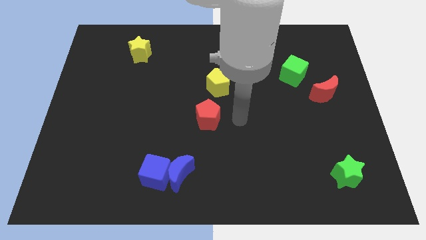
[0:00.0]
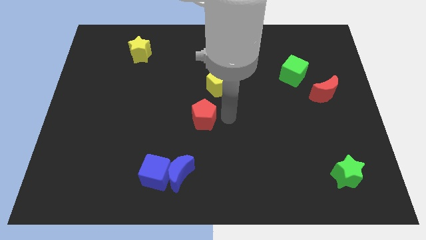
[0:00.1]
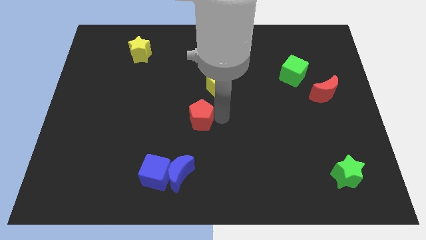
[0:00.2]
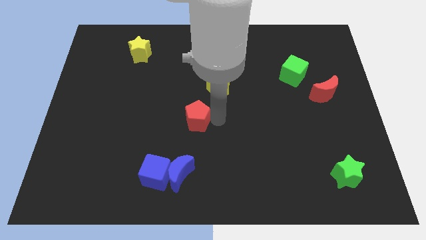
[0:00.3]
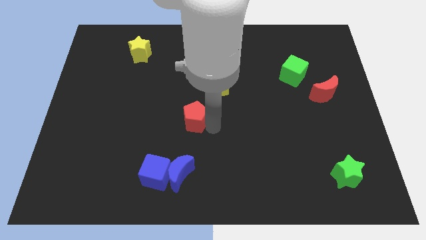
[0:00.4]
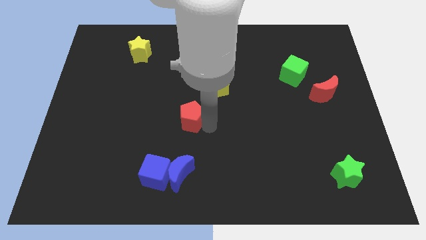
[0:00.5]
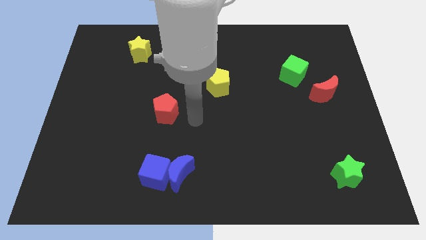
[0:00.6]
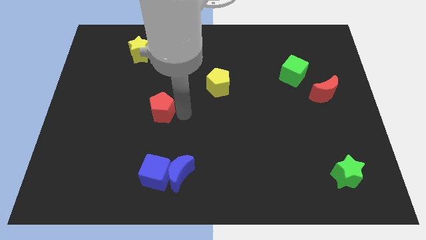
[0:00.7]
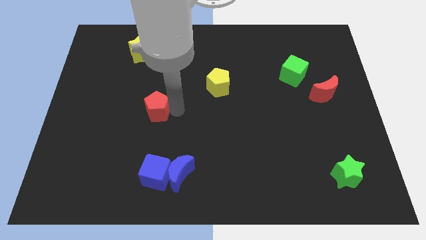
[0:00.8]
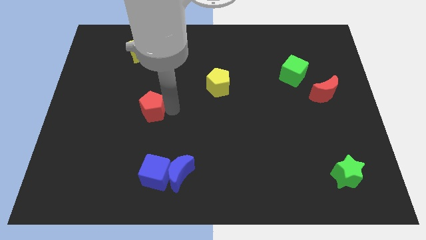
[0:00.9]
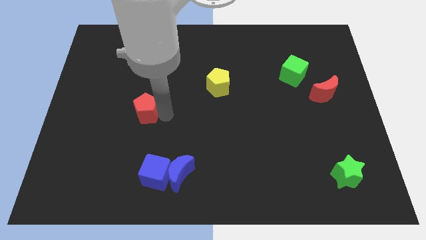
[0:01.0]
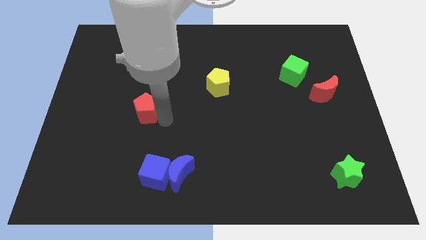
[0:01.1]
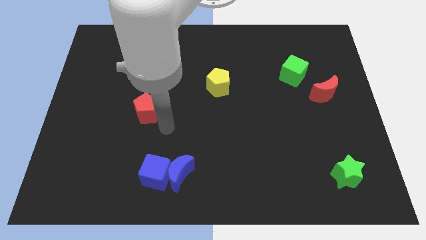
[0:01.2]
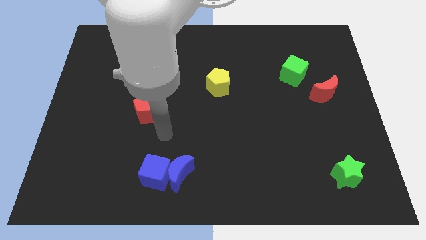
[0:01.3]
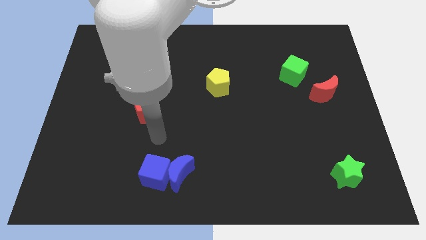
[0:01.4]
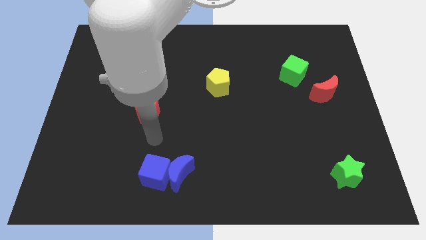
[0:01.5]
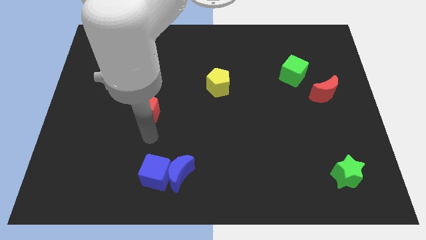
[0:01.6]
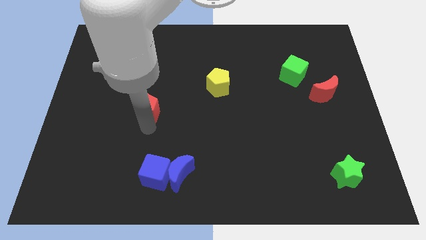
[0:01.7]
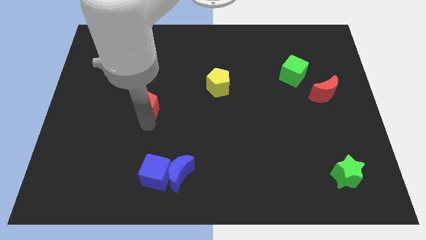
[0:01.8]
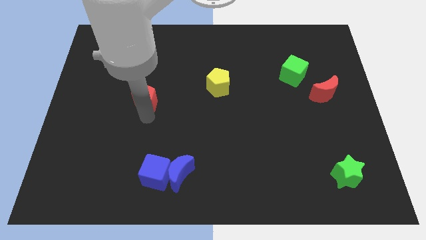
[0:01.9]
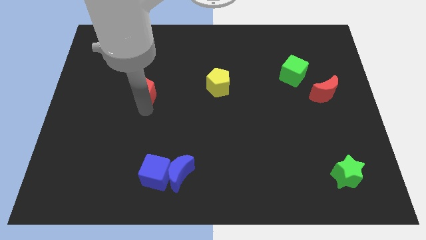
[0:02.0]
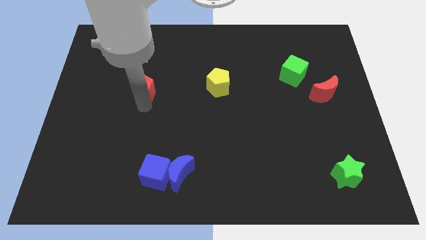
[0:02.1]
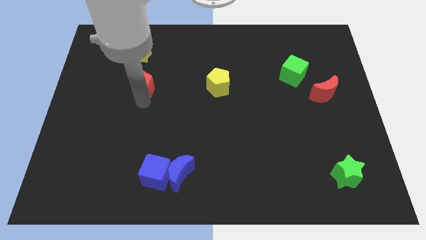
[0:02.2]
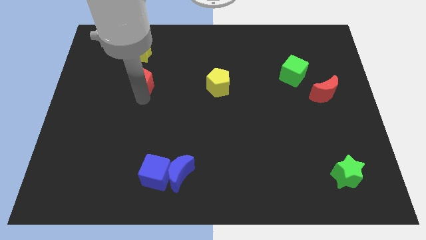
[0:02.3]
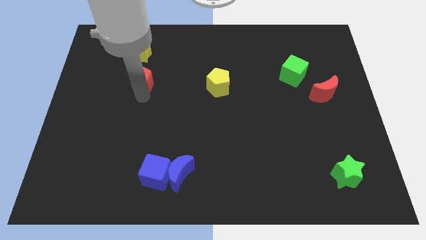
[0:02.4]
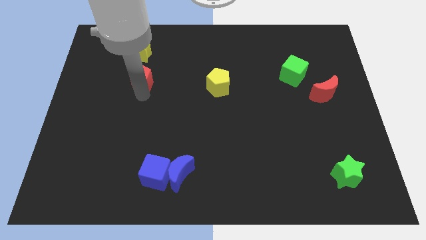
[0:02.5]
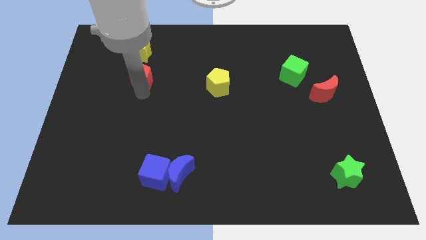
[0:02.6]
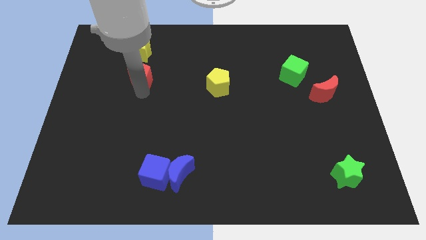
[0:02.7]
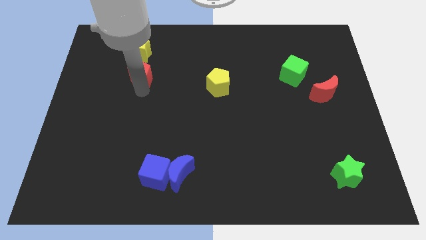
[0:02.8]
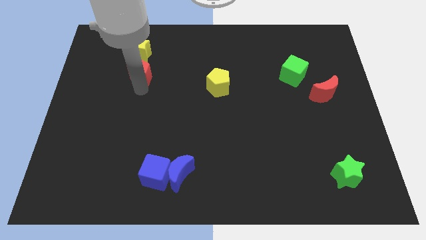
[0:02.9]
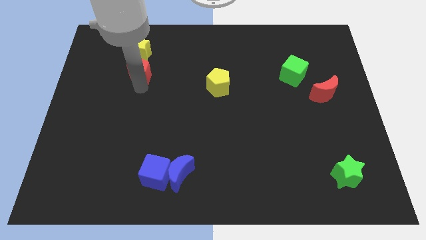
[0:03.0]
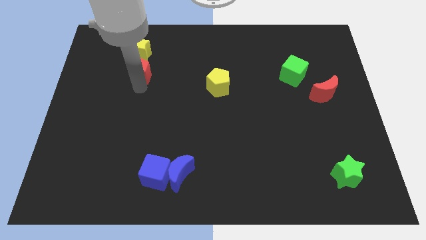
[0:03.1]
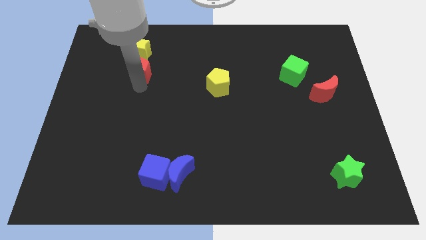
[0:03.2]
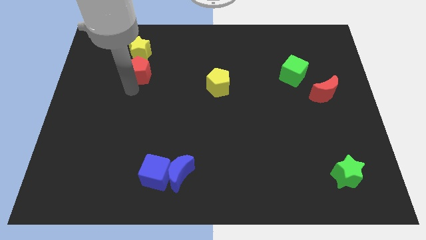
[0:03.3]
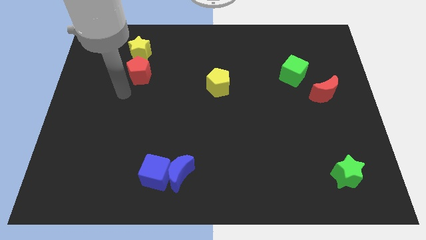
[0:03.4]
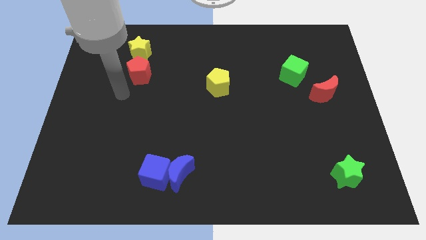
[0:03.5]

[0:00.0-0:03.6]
place red pentagon to the bottom of yellow star

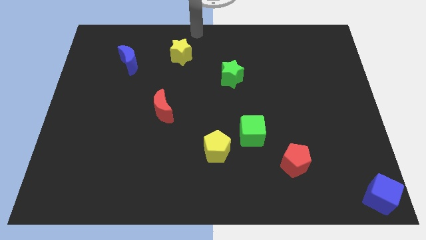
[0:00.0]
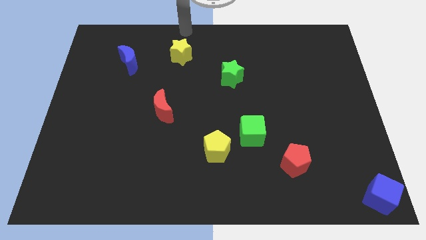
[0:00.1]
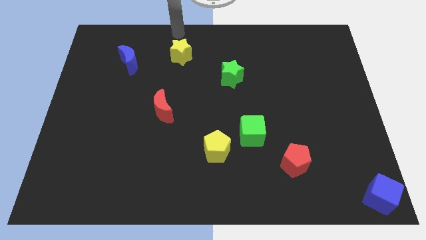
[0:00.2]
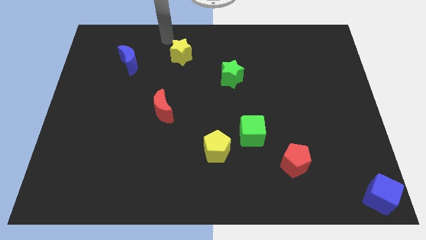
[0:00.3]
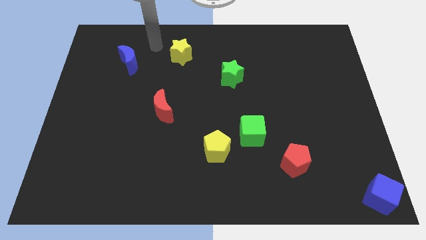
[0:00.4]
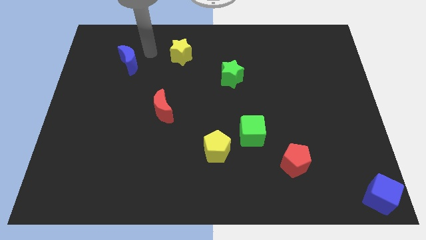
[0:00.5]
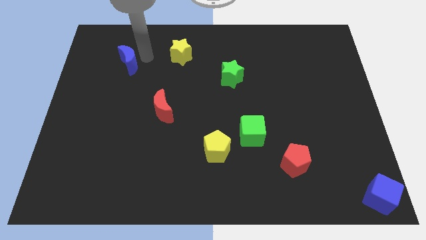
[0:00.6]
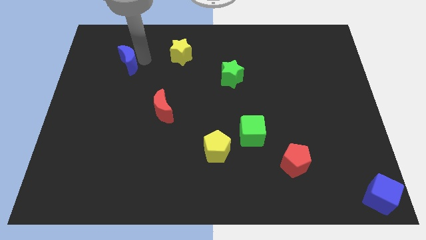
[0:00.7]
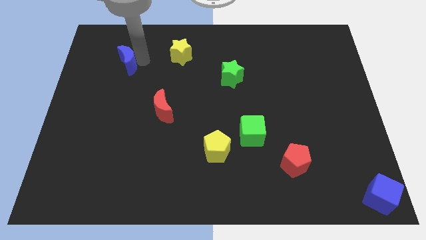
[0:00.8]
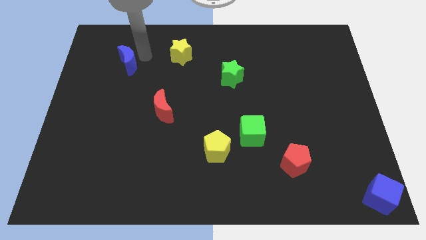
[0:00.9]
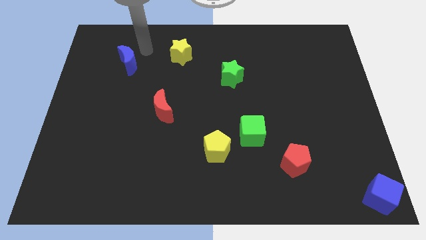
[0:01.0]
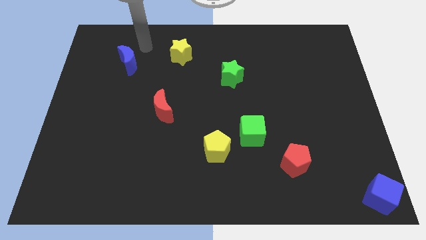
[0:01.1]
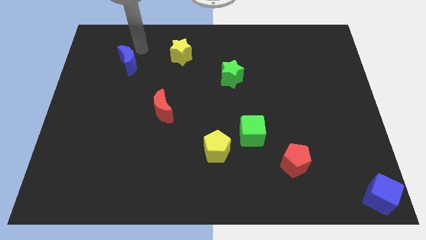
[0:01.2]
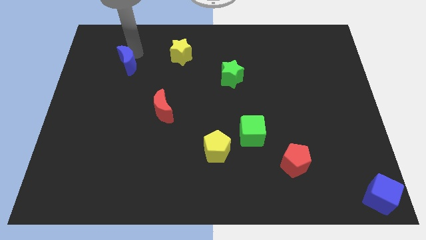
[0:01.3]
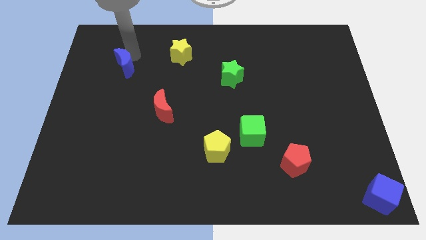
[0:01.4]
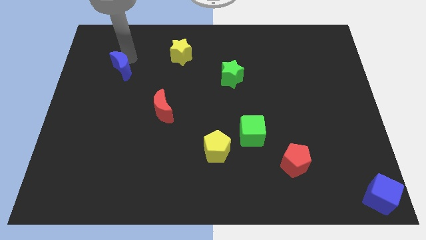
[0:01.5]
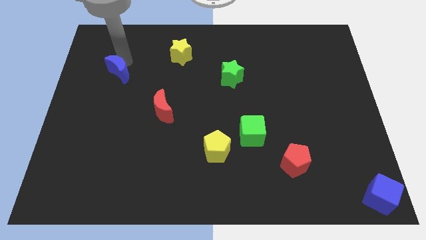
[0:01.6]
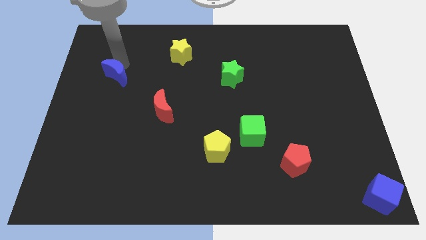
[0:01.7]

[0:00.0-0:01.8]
push the blue crescent slightly to the bottom

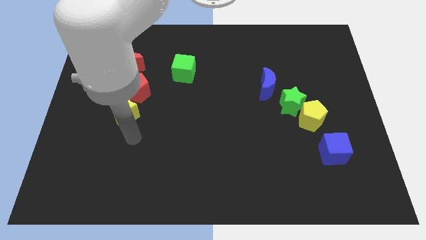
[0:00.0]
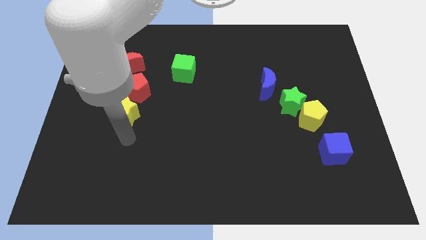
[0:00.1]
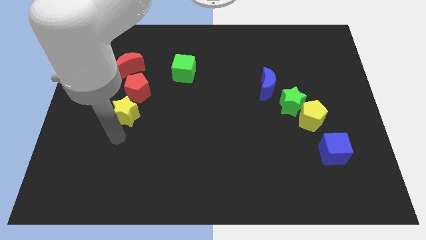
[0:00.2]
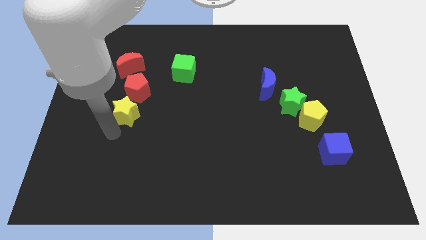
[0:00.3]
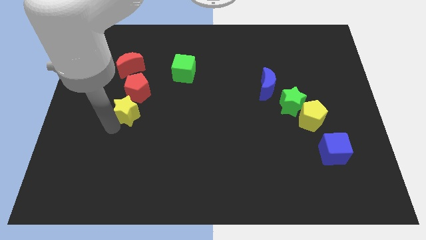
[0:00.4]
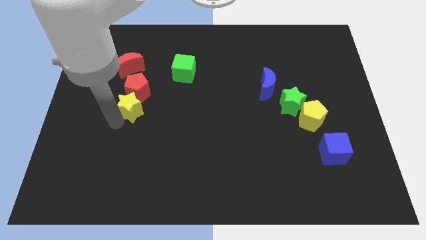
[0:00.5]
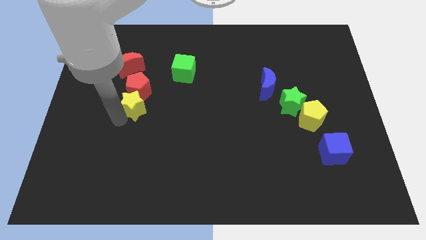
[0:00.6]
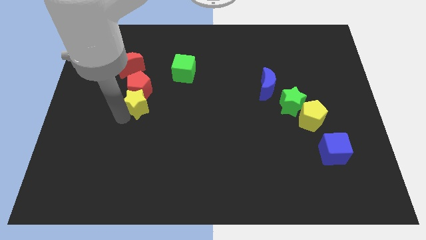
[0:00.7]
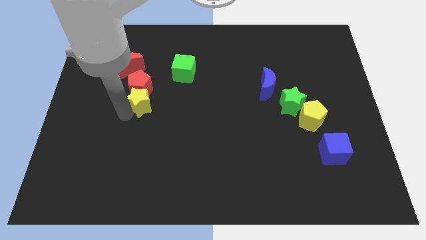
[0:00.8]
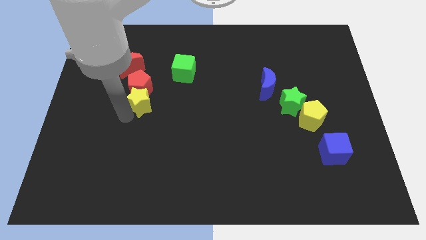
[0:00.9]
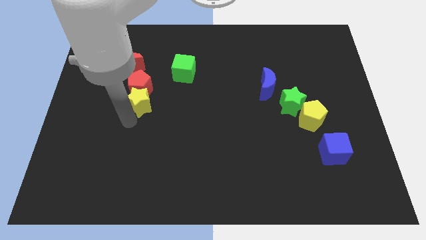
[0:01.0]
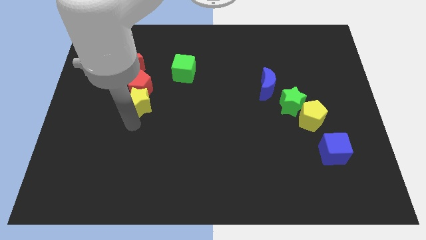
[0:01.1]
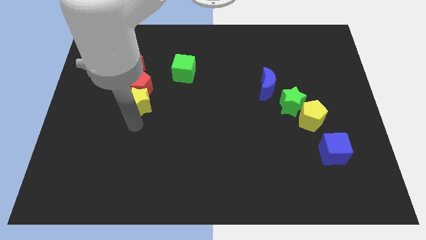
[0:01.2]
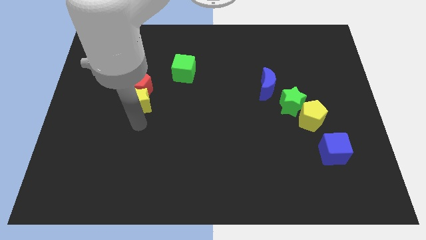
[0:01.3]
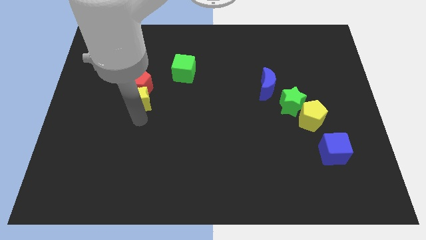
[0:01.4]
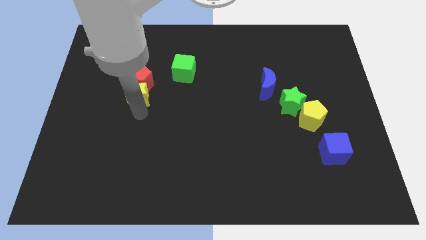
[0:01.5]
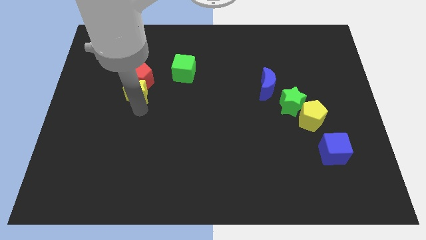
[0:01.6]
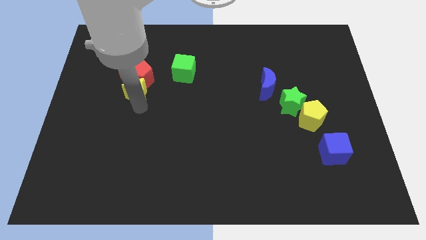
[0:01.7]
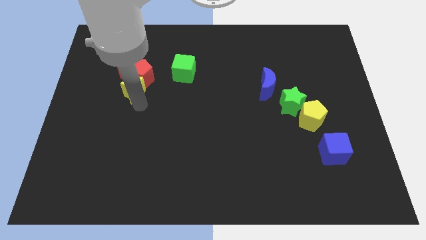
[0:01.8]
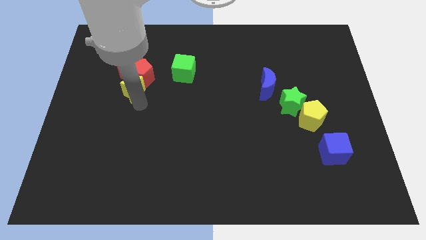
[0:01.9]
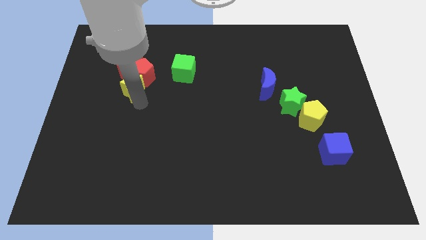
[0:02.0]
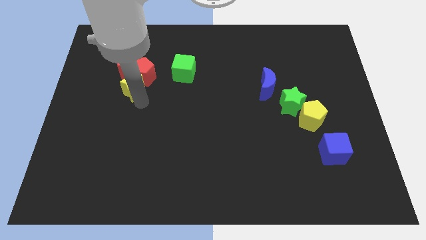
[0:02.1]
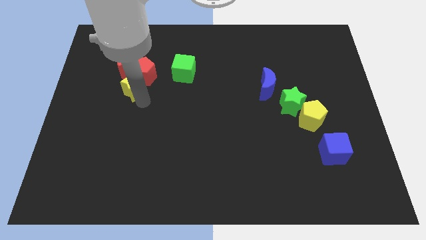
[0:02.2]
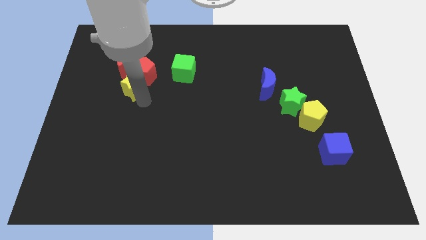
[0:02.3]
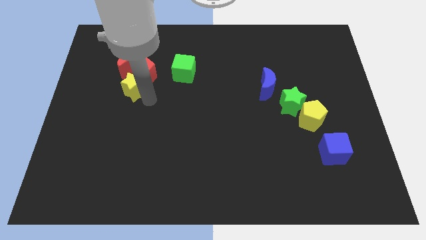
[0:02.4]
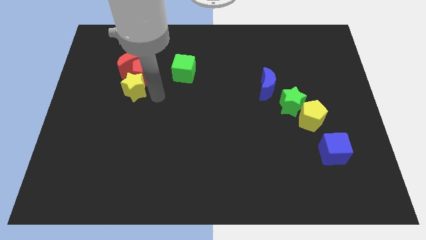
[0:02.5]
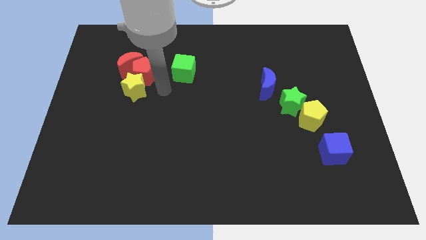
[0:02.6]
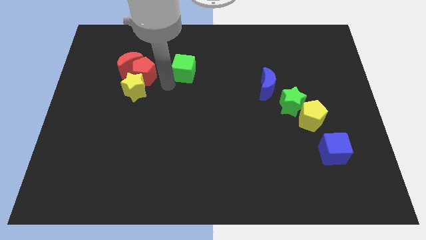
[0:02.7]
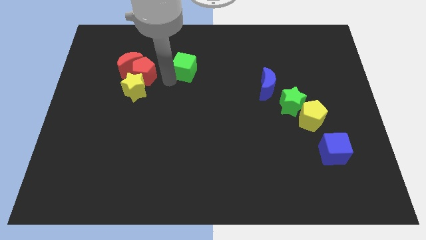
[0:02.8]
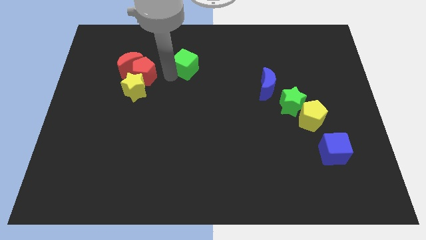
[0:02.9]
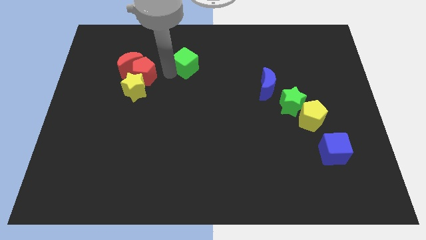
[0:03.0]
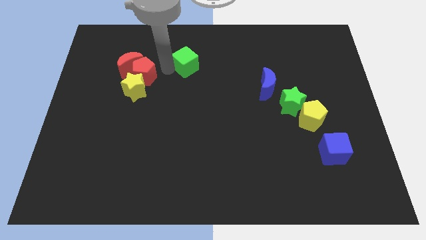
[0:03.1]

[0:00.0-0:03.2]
move the yellow star along with the red pentagon into the red crescent

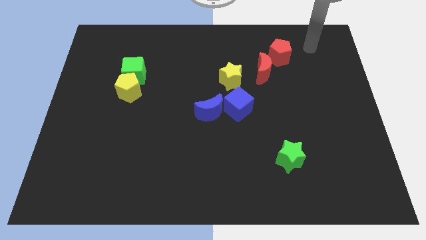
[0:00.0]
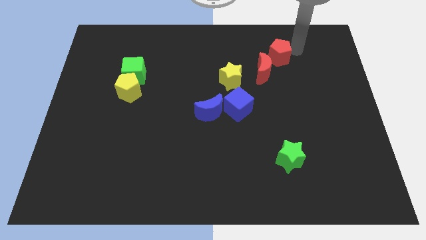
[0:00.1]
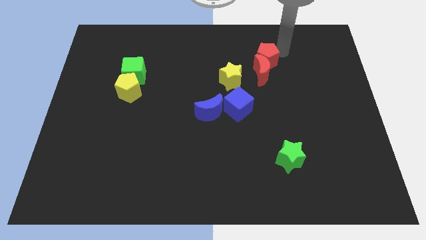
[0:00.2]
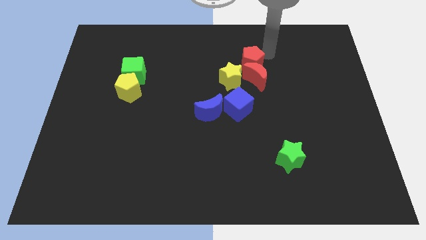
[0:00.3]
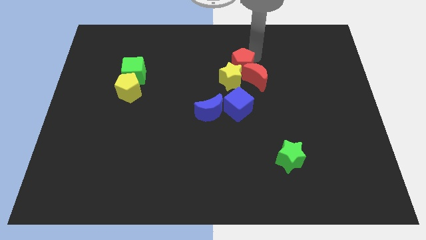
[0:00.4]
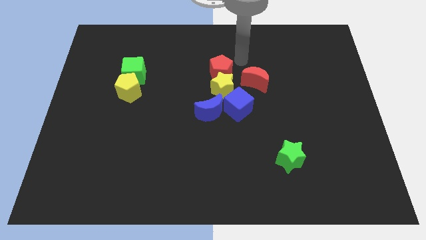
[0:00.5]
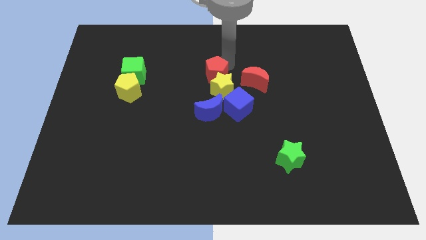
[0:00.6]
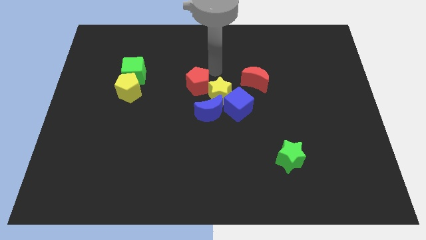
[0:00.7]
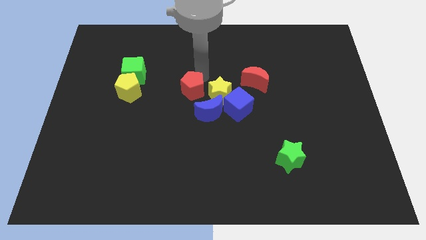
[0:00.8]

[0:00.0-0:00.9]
push the red pentagon to the left of the yellow star
